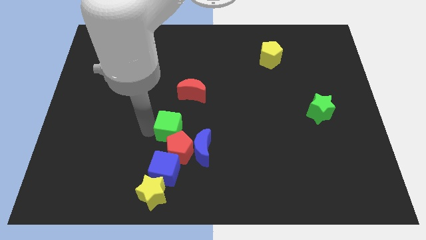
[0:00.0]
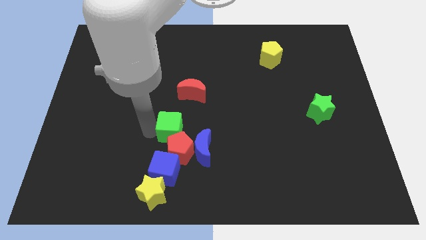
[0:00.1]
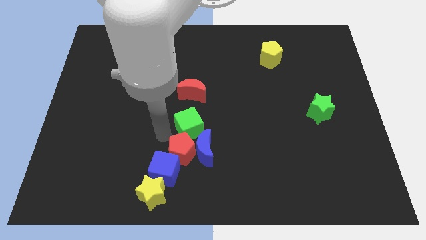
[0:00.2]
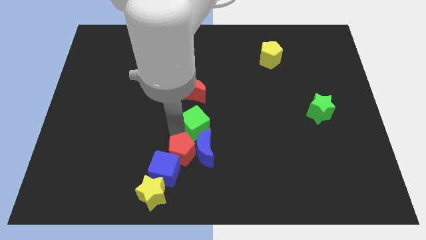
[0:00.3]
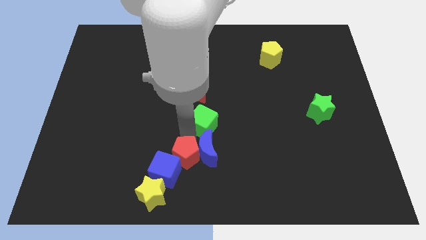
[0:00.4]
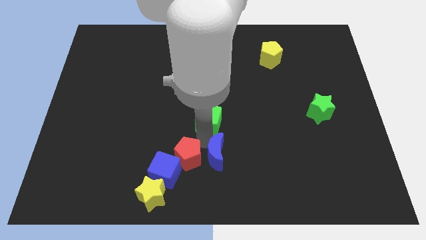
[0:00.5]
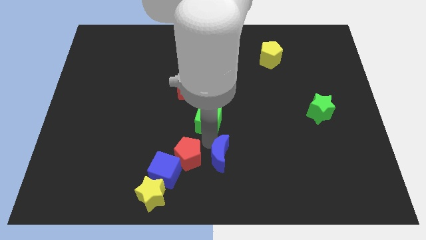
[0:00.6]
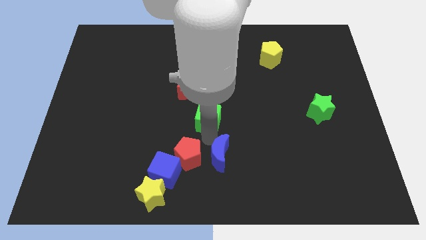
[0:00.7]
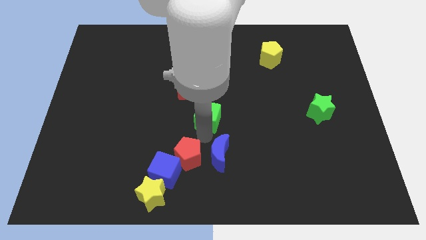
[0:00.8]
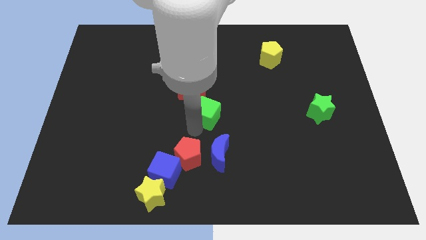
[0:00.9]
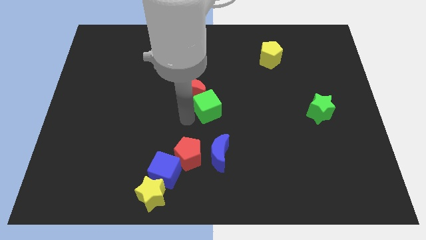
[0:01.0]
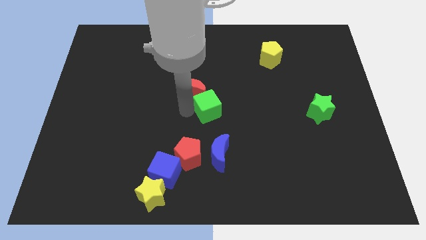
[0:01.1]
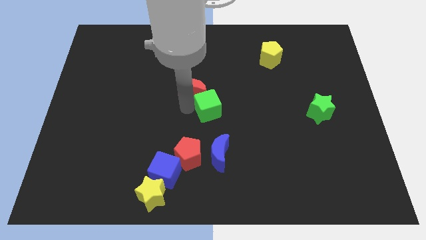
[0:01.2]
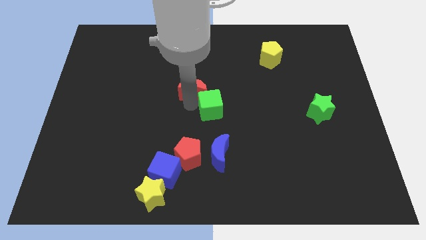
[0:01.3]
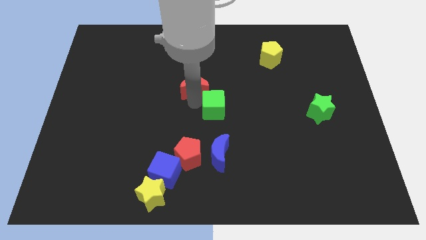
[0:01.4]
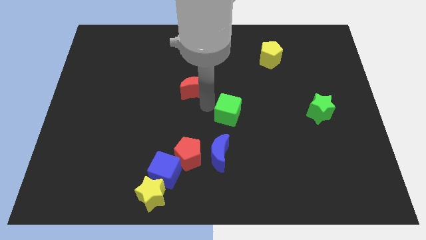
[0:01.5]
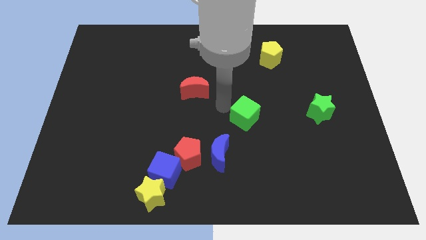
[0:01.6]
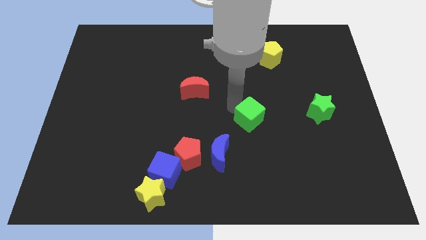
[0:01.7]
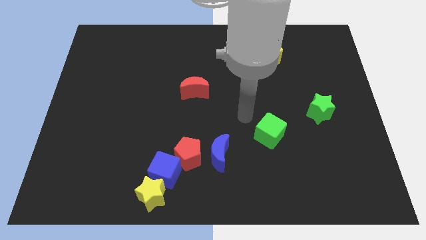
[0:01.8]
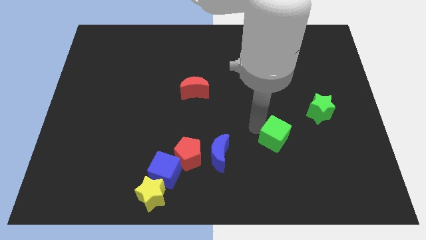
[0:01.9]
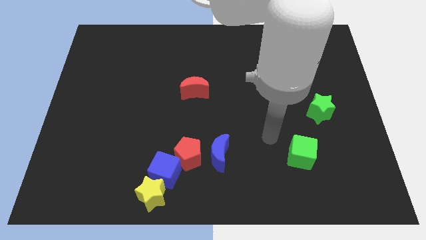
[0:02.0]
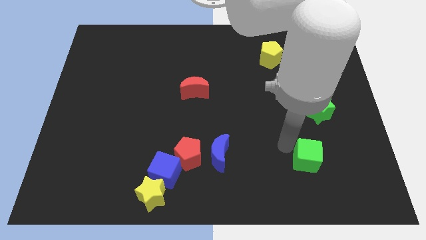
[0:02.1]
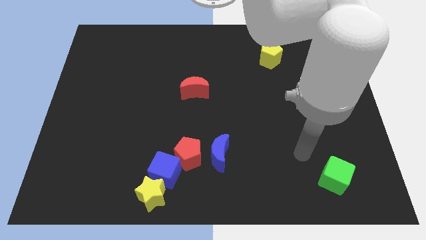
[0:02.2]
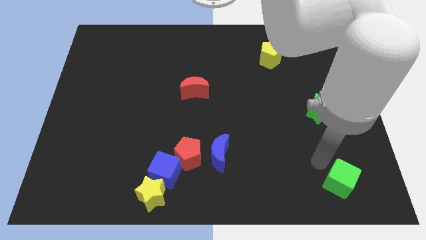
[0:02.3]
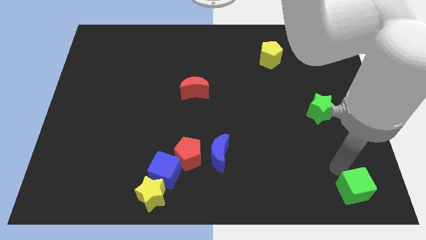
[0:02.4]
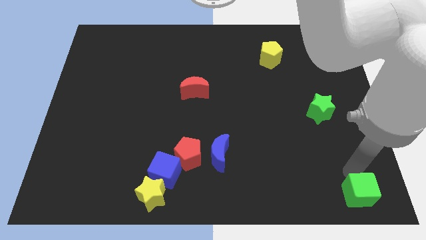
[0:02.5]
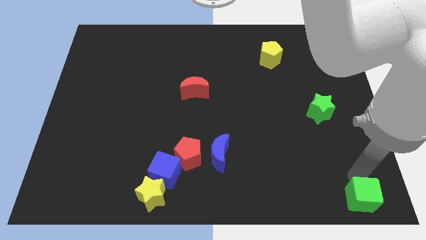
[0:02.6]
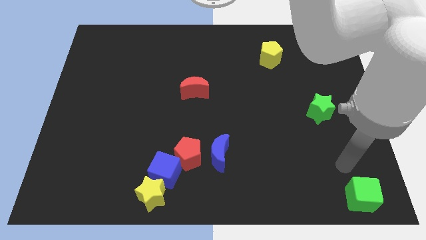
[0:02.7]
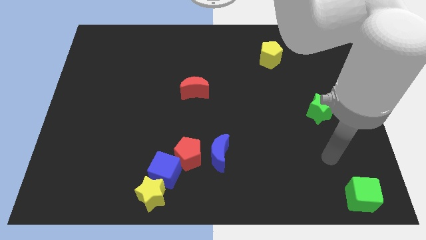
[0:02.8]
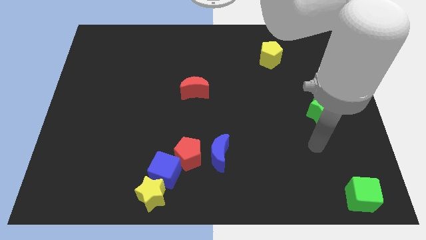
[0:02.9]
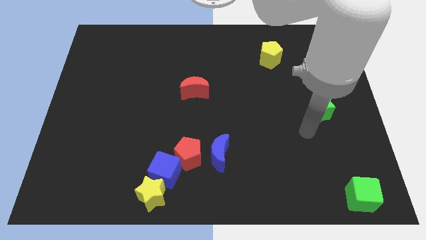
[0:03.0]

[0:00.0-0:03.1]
separate the green cube from the group of blocks

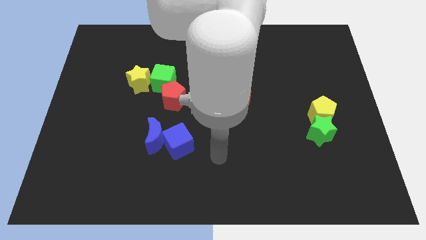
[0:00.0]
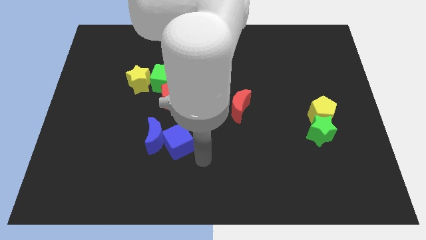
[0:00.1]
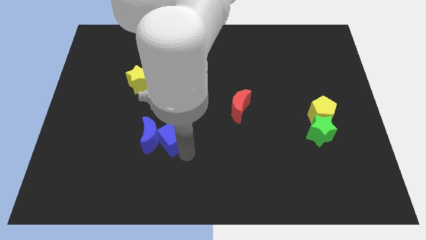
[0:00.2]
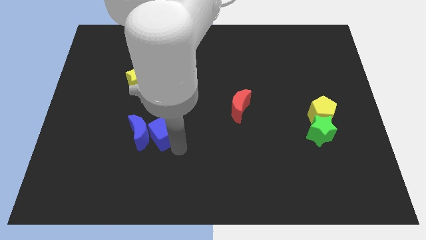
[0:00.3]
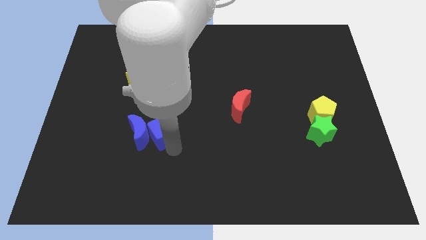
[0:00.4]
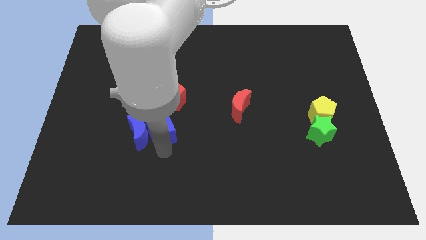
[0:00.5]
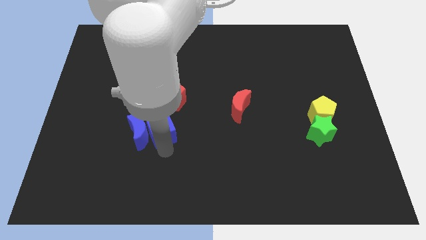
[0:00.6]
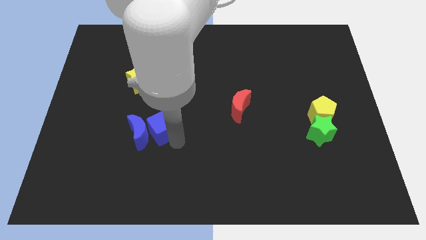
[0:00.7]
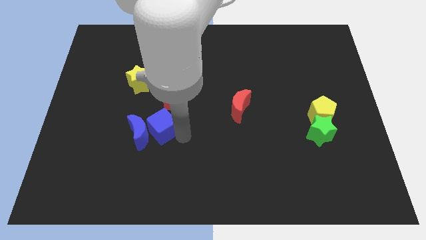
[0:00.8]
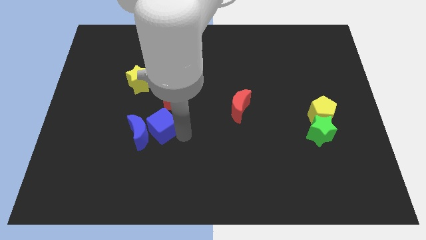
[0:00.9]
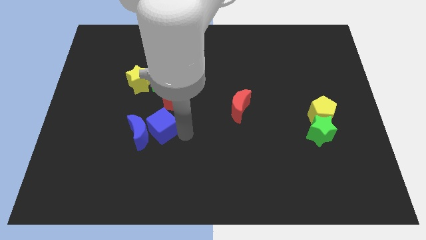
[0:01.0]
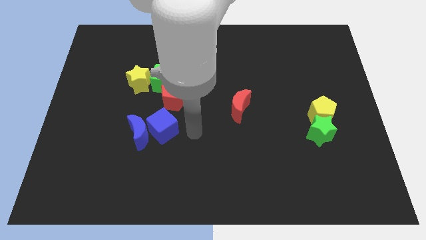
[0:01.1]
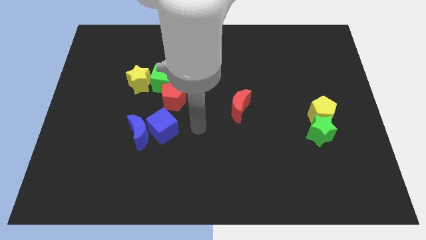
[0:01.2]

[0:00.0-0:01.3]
put the blue cube underneath the red pentagon

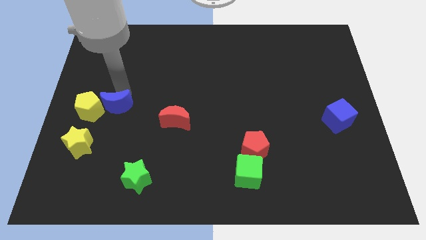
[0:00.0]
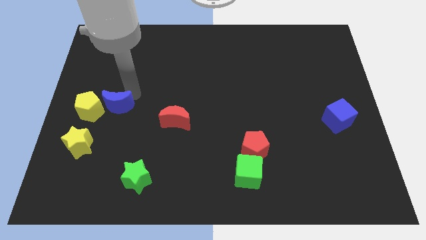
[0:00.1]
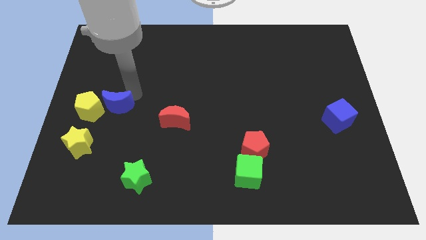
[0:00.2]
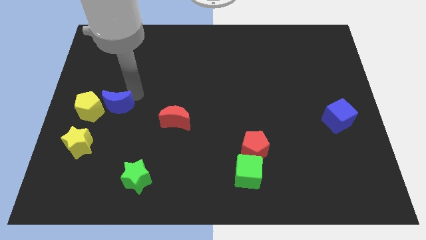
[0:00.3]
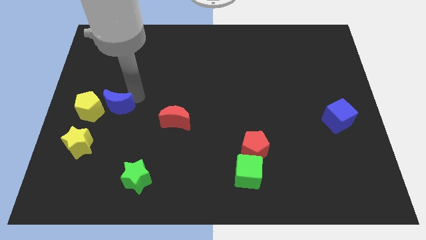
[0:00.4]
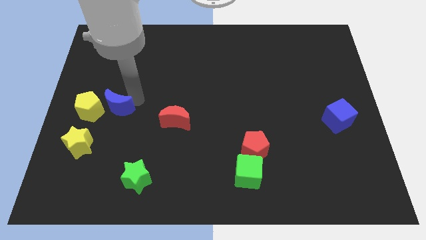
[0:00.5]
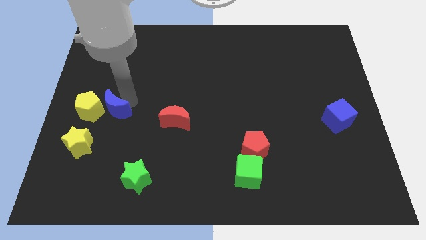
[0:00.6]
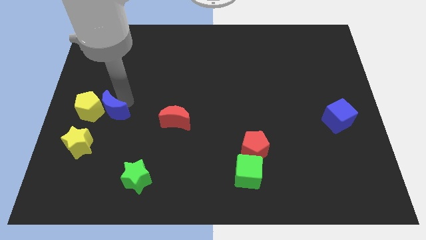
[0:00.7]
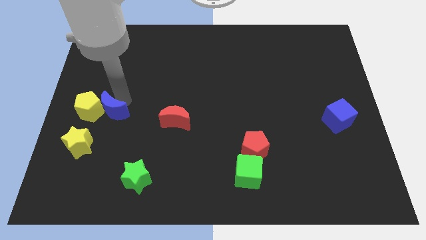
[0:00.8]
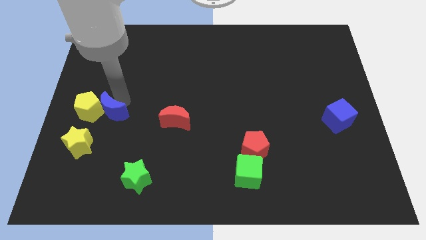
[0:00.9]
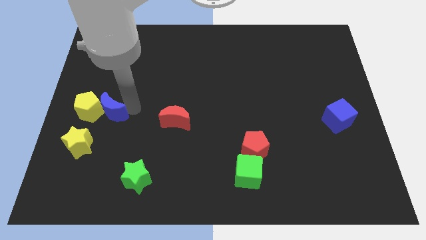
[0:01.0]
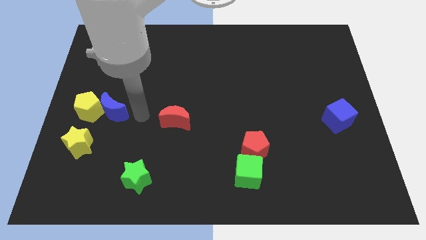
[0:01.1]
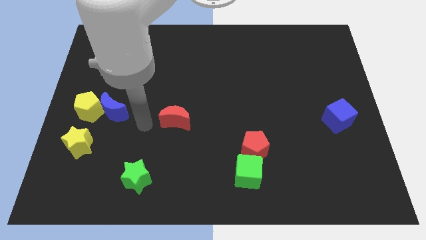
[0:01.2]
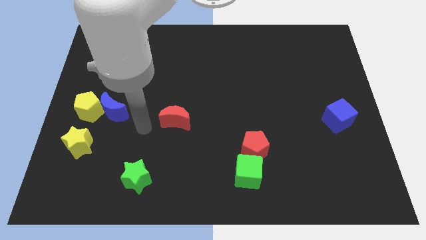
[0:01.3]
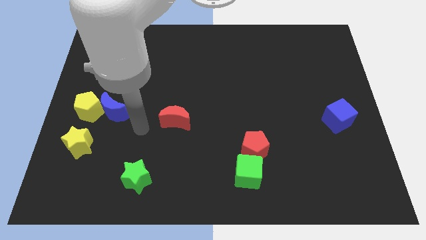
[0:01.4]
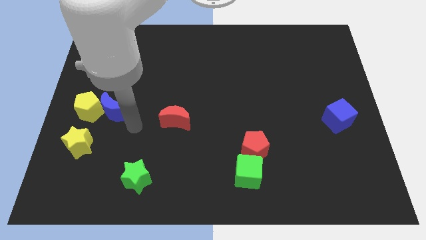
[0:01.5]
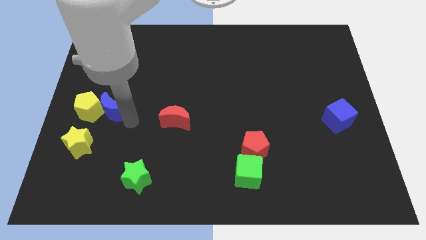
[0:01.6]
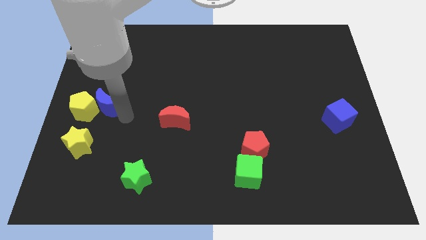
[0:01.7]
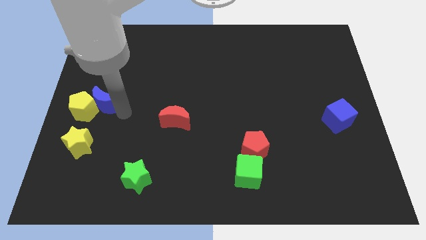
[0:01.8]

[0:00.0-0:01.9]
adjust the blue moon and yellow pentagon at the top side of the yellow star

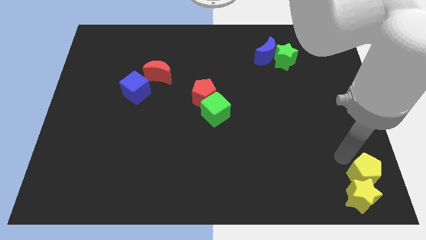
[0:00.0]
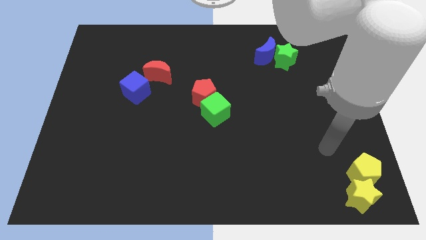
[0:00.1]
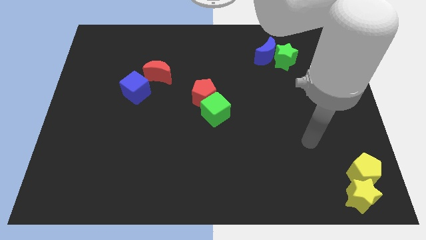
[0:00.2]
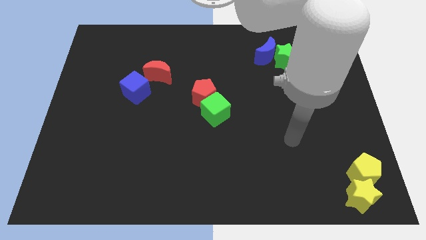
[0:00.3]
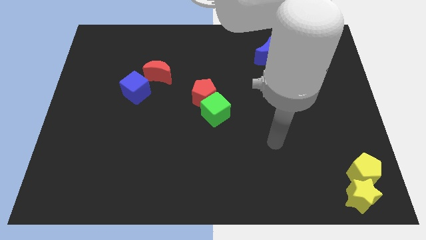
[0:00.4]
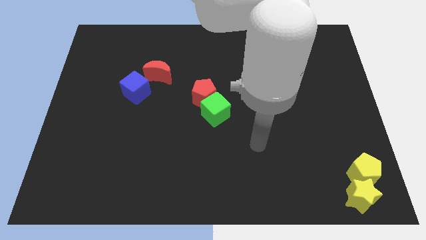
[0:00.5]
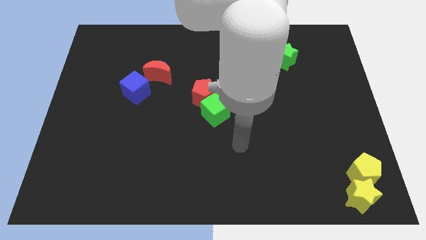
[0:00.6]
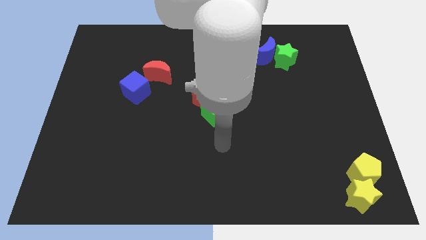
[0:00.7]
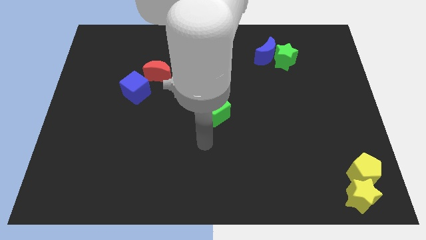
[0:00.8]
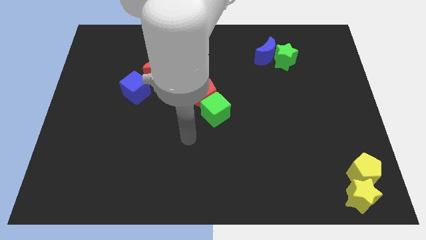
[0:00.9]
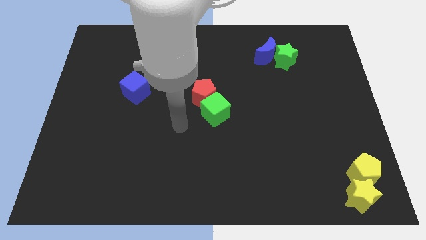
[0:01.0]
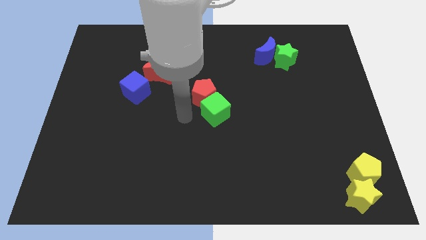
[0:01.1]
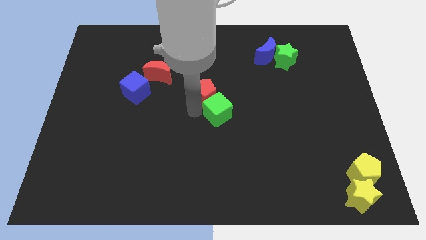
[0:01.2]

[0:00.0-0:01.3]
move your arm towards green cube

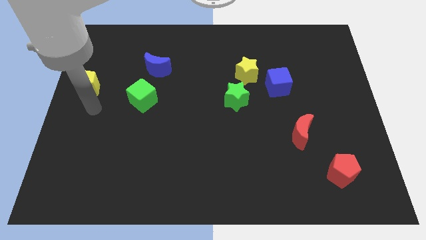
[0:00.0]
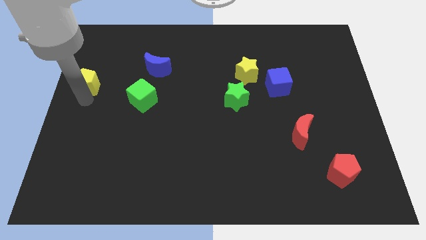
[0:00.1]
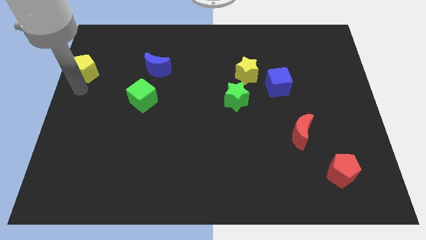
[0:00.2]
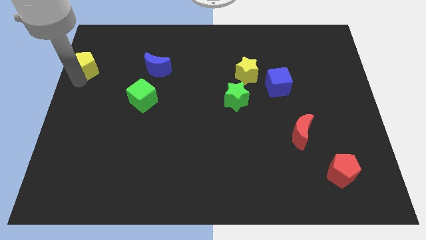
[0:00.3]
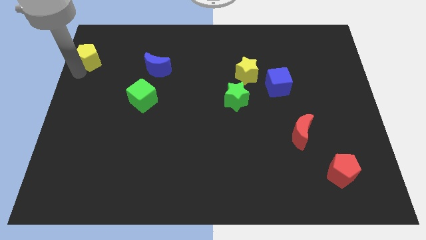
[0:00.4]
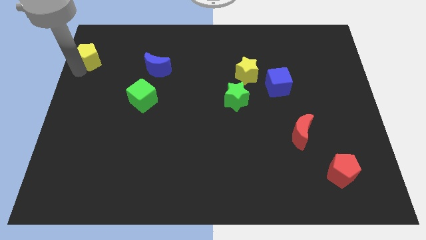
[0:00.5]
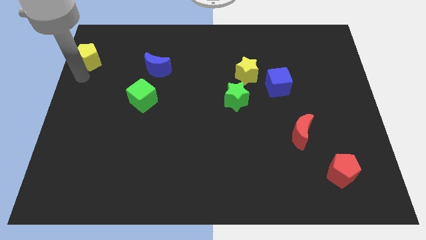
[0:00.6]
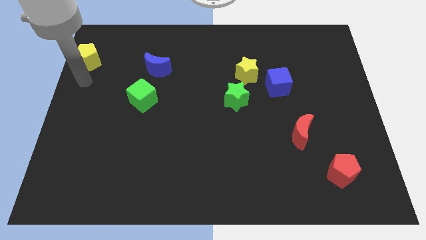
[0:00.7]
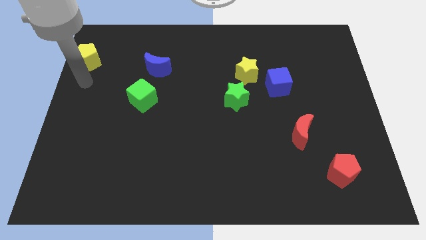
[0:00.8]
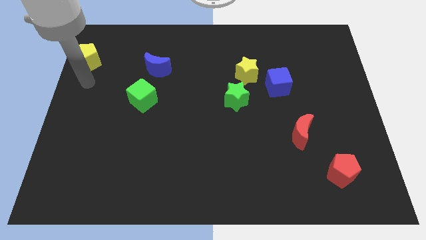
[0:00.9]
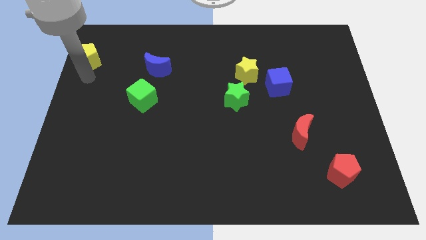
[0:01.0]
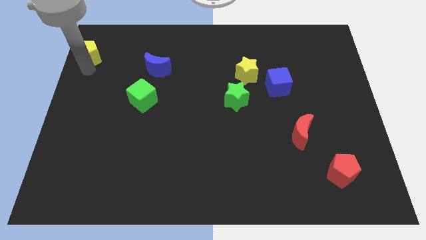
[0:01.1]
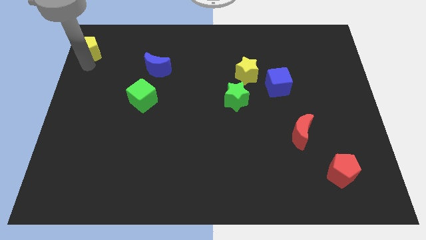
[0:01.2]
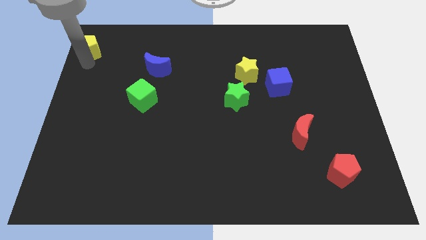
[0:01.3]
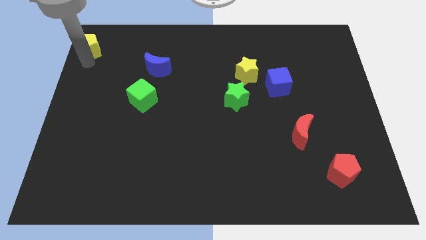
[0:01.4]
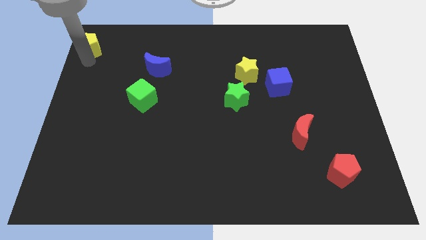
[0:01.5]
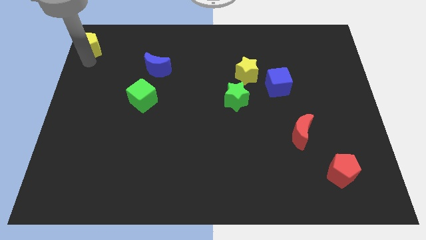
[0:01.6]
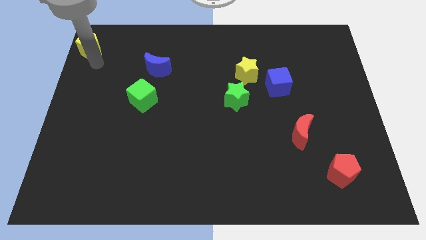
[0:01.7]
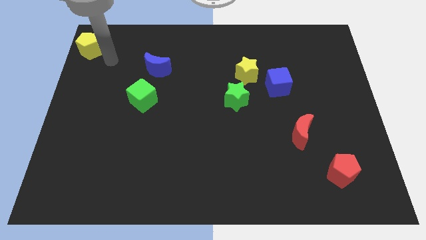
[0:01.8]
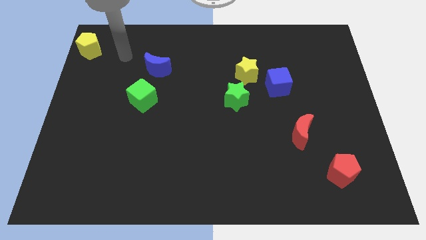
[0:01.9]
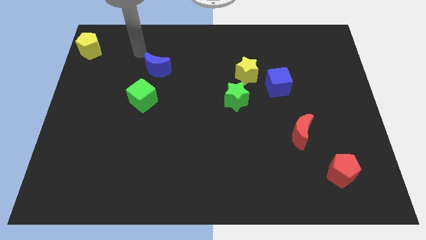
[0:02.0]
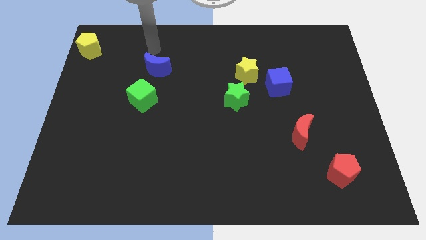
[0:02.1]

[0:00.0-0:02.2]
move the yellow pentagon to the top left corner of the board
